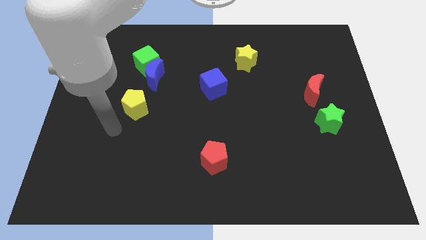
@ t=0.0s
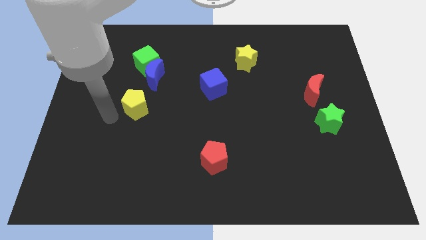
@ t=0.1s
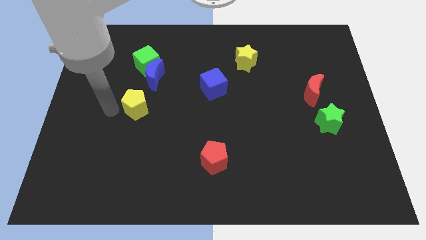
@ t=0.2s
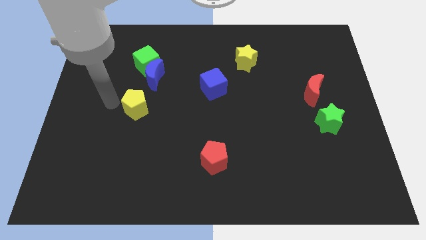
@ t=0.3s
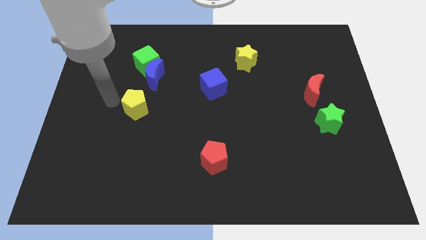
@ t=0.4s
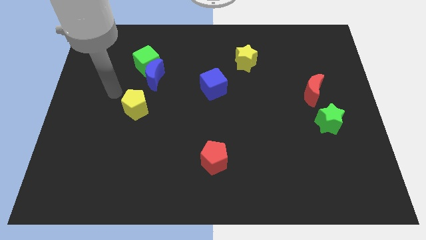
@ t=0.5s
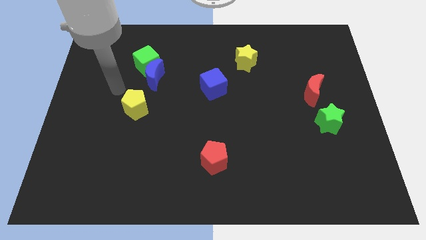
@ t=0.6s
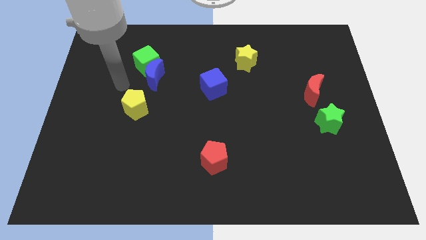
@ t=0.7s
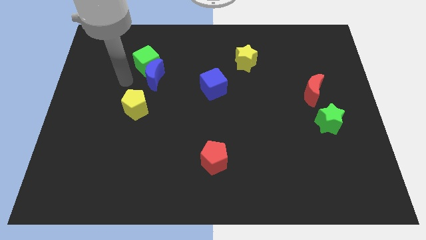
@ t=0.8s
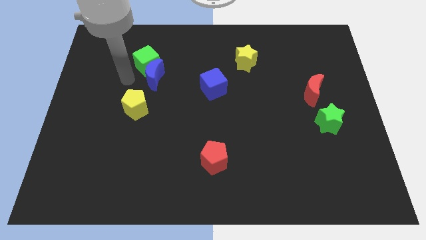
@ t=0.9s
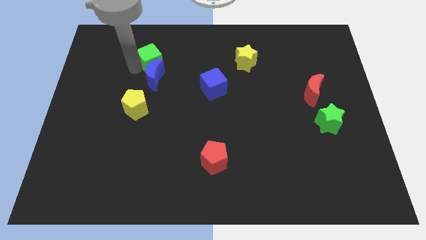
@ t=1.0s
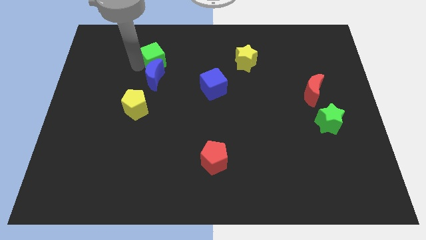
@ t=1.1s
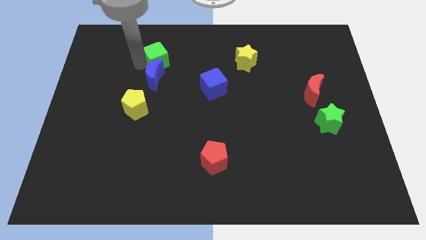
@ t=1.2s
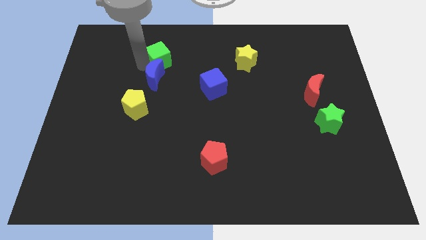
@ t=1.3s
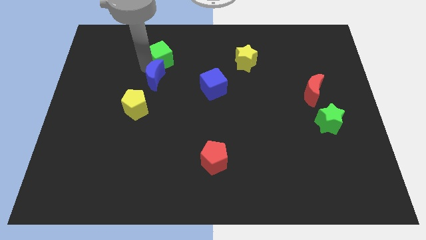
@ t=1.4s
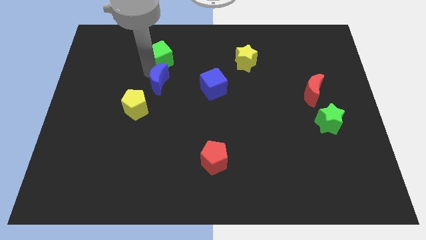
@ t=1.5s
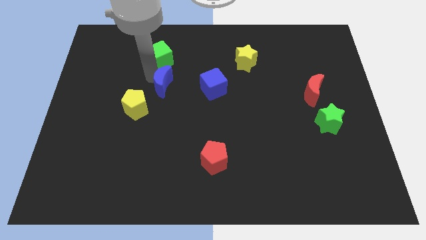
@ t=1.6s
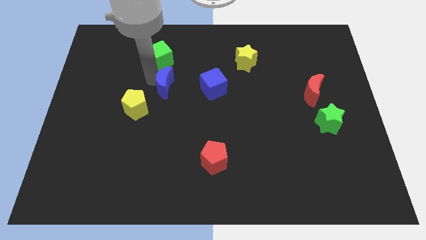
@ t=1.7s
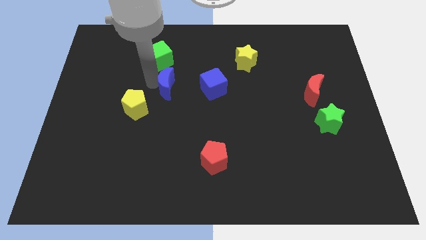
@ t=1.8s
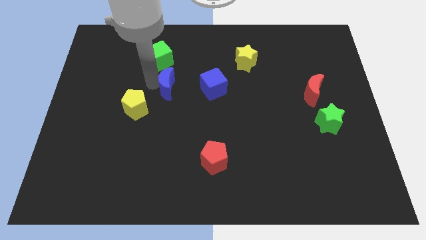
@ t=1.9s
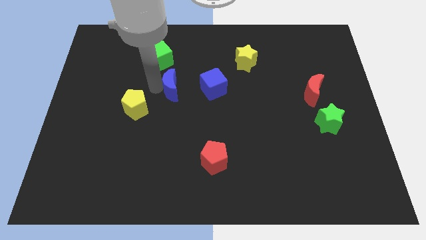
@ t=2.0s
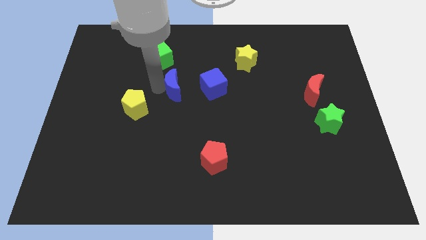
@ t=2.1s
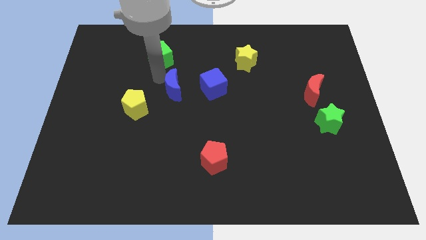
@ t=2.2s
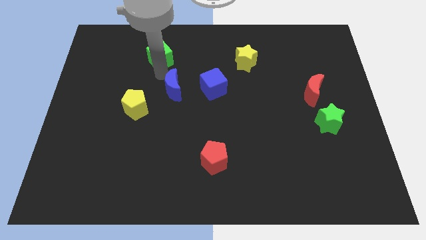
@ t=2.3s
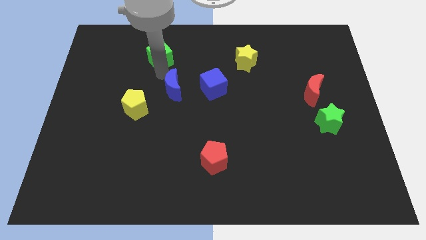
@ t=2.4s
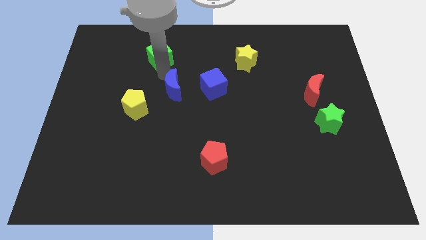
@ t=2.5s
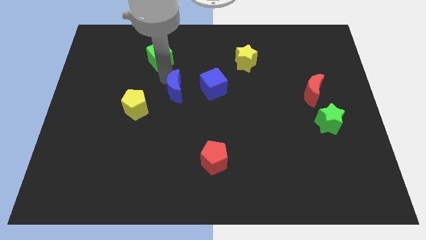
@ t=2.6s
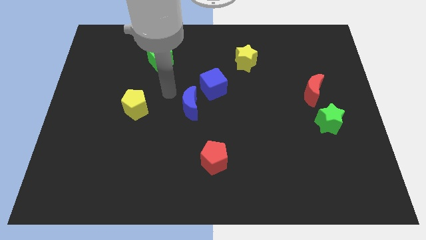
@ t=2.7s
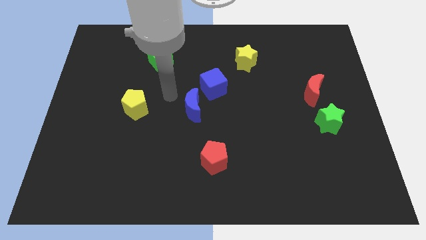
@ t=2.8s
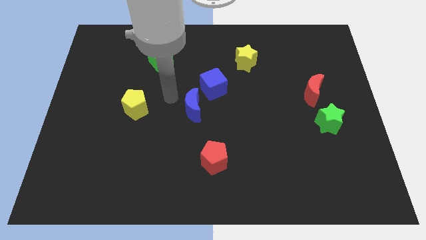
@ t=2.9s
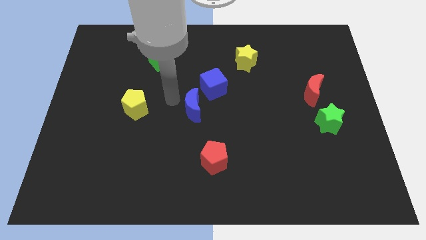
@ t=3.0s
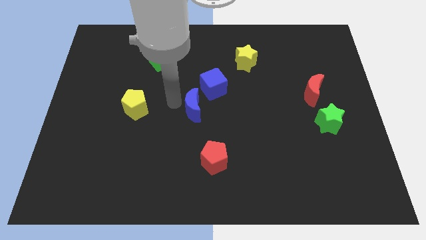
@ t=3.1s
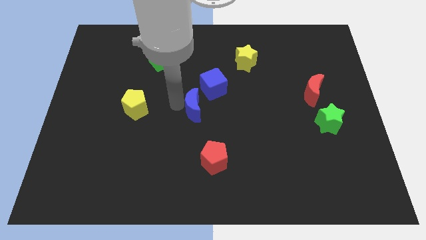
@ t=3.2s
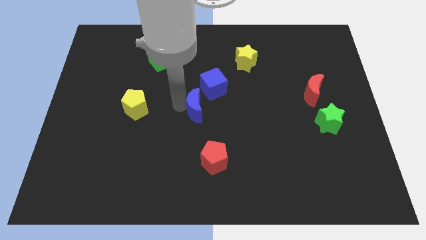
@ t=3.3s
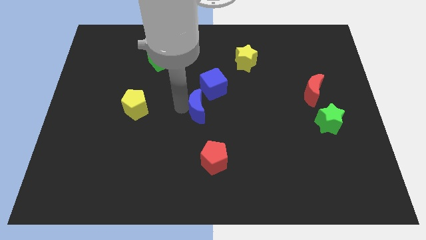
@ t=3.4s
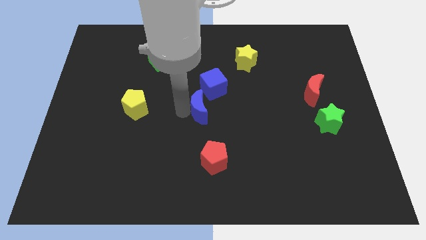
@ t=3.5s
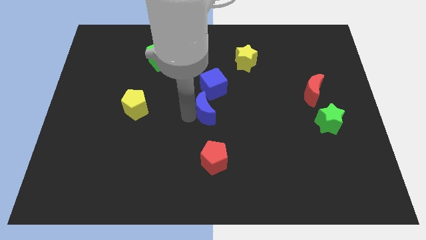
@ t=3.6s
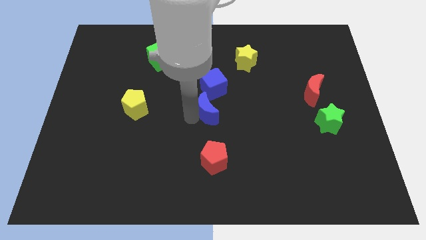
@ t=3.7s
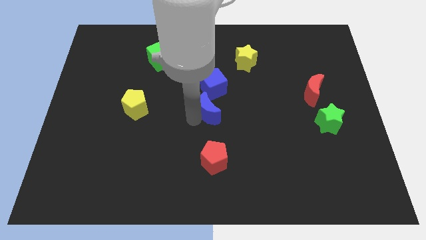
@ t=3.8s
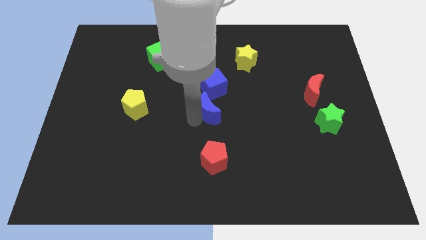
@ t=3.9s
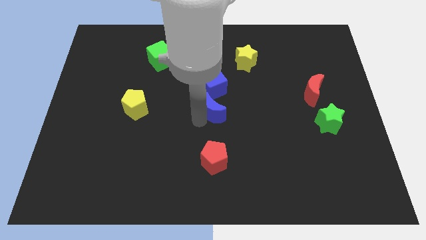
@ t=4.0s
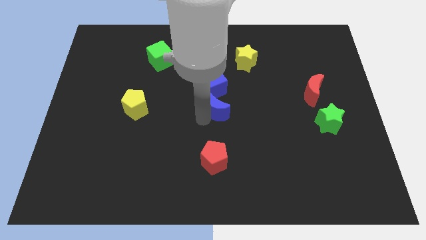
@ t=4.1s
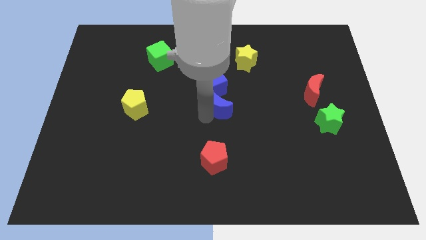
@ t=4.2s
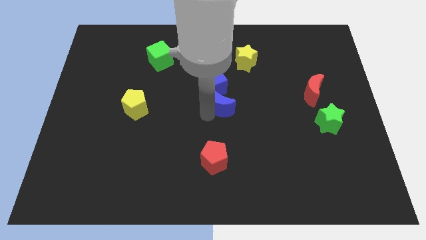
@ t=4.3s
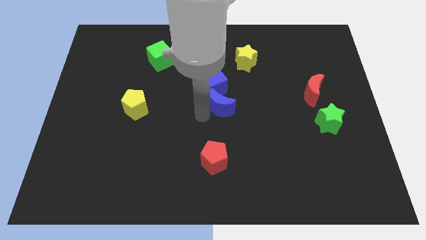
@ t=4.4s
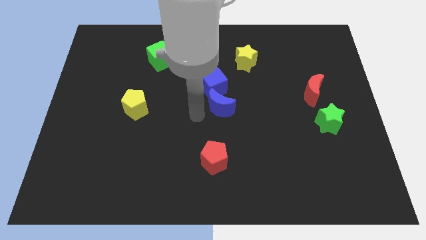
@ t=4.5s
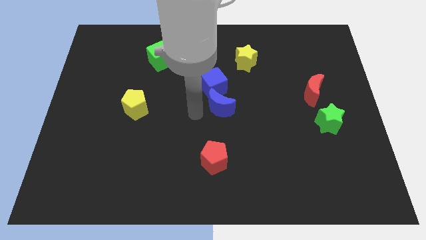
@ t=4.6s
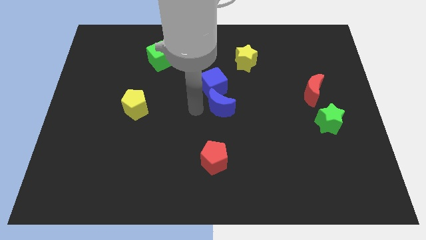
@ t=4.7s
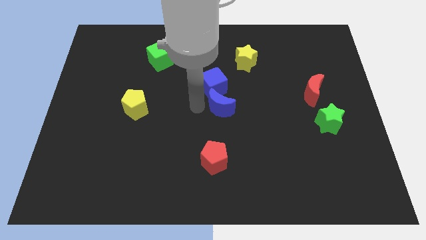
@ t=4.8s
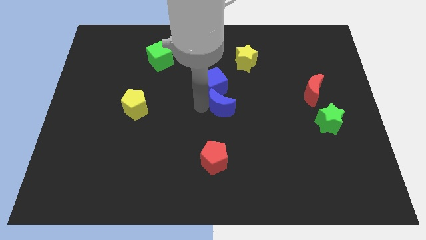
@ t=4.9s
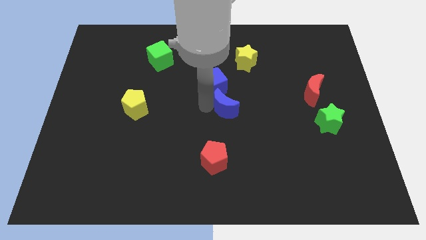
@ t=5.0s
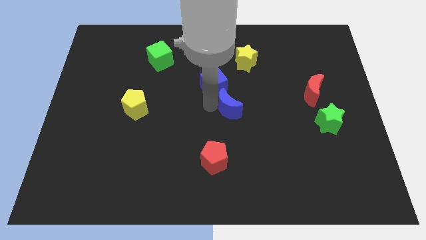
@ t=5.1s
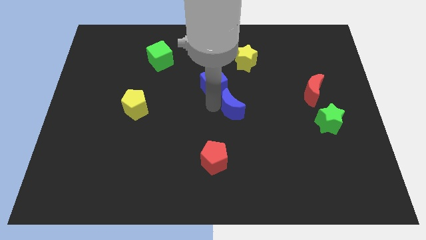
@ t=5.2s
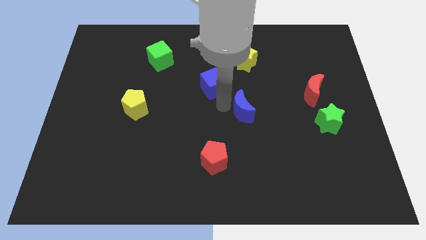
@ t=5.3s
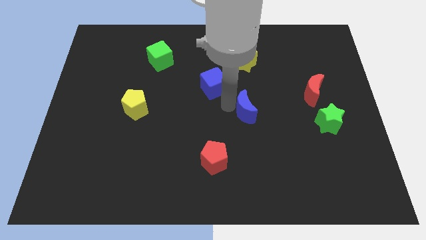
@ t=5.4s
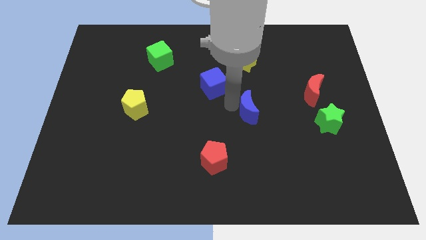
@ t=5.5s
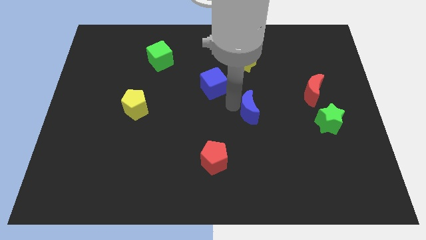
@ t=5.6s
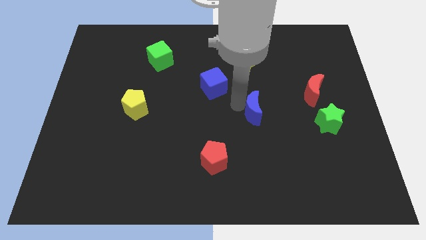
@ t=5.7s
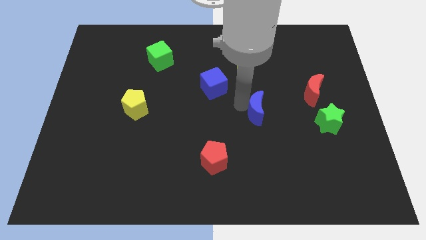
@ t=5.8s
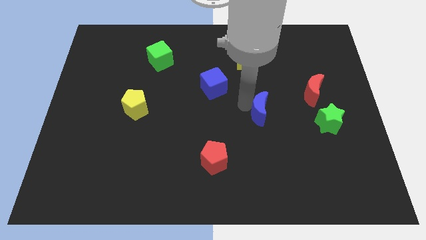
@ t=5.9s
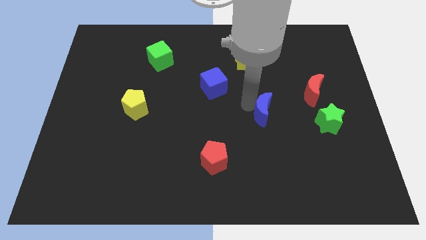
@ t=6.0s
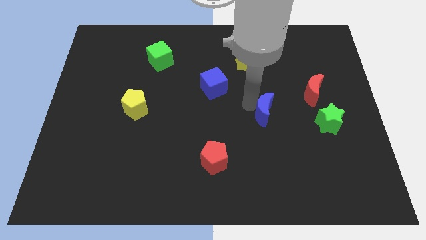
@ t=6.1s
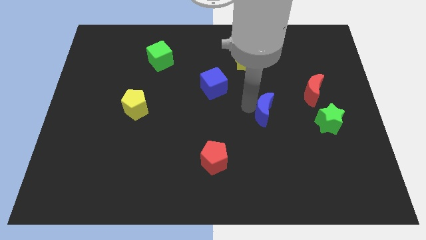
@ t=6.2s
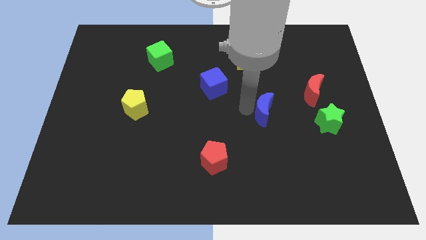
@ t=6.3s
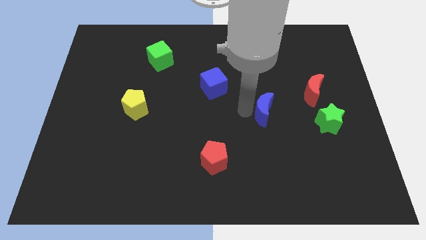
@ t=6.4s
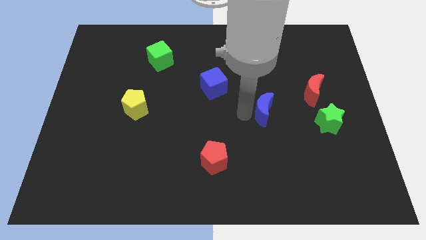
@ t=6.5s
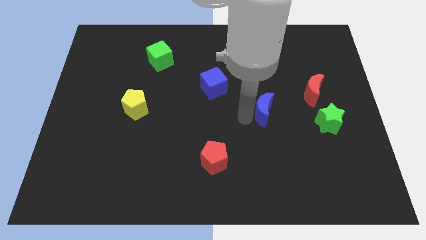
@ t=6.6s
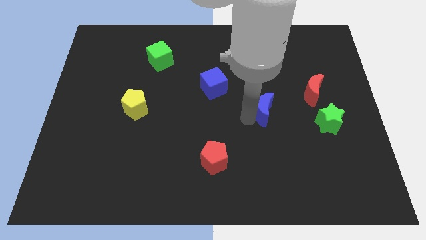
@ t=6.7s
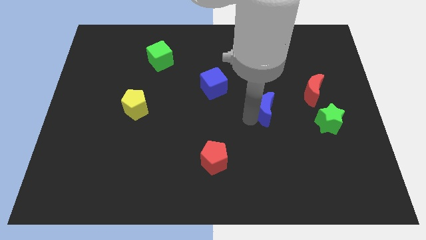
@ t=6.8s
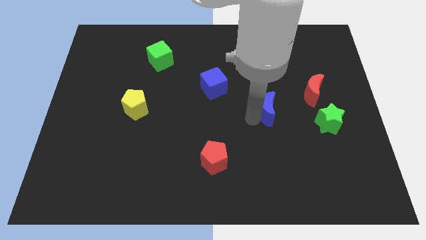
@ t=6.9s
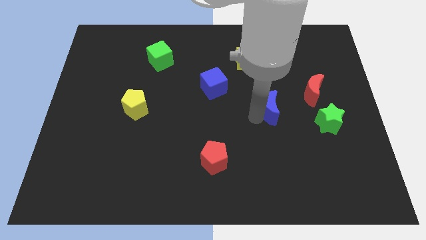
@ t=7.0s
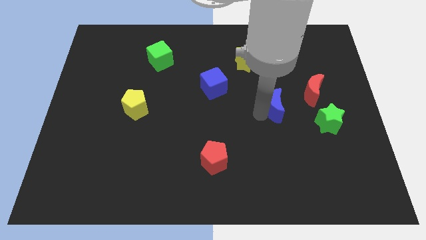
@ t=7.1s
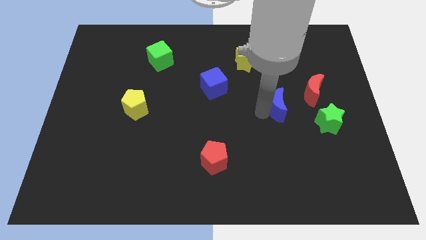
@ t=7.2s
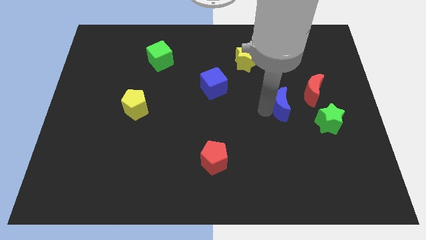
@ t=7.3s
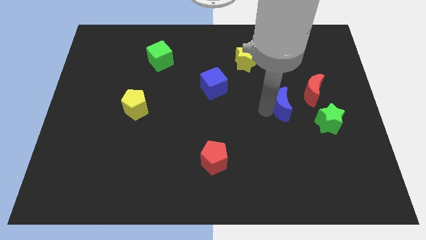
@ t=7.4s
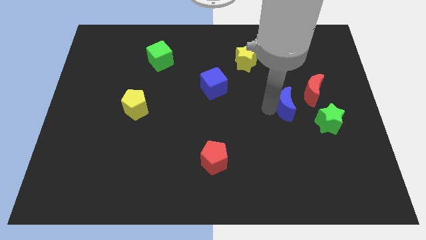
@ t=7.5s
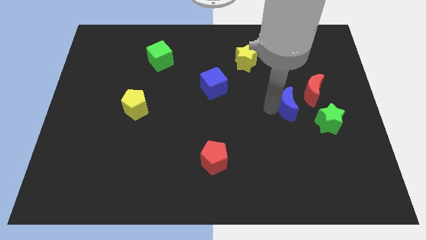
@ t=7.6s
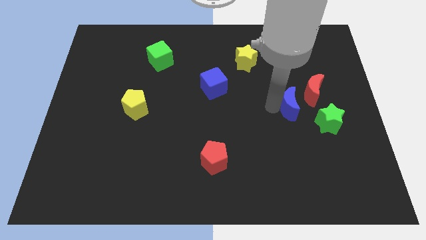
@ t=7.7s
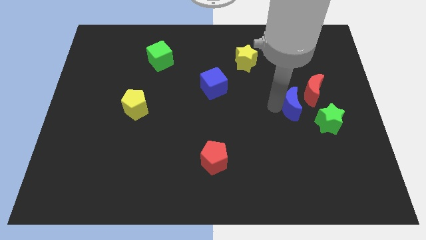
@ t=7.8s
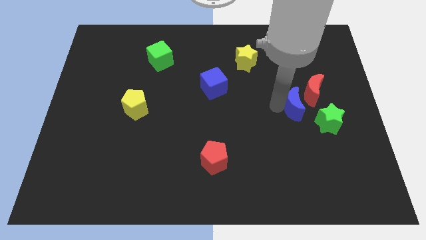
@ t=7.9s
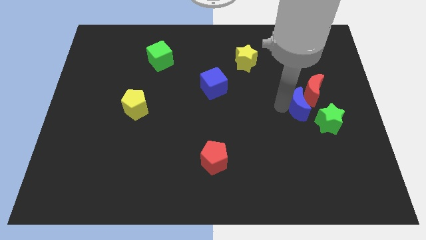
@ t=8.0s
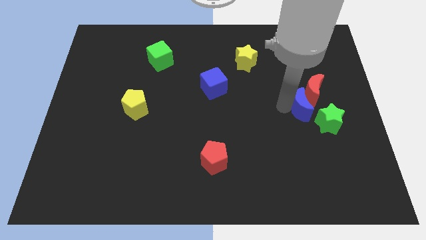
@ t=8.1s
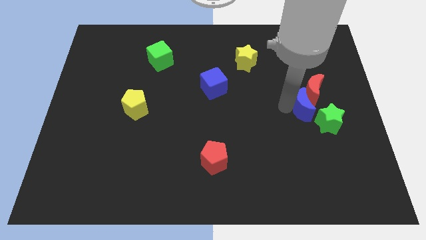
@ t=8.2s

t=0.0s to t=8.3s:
put the blue moon next to the red moon

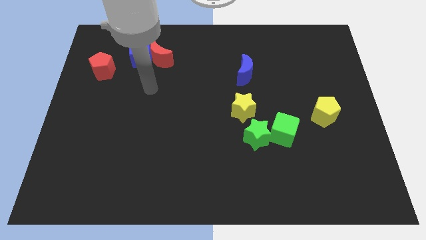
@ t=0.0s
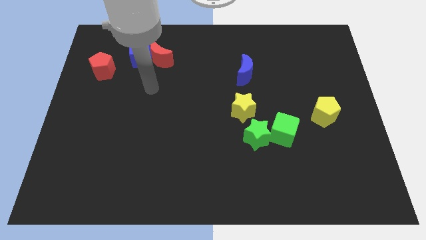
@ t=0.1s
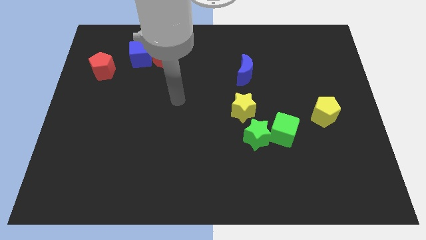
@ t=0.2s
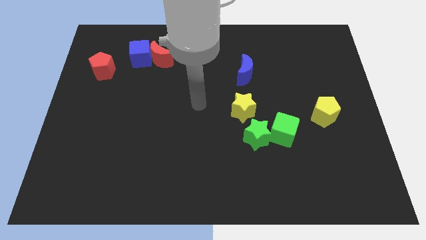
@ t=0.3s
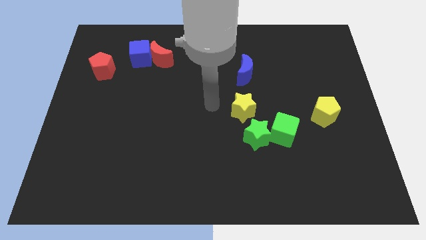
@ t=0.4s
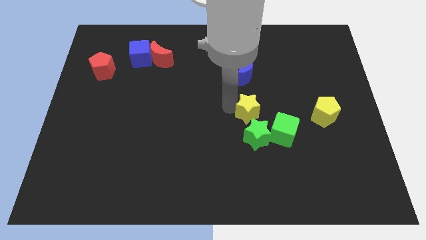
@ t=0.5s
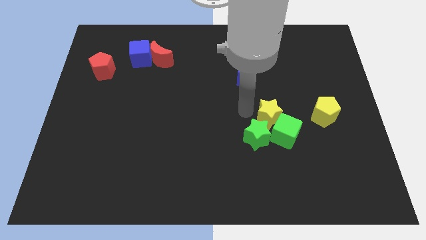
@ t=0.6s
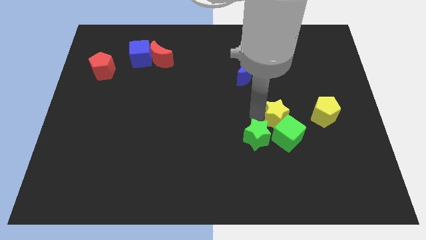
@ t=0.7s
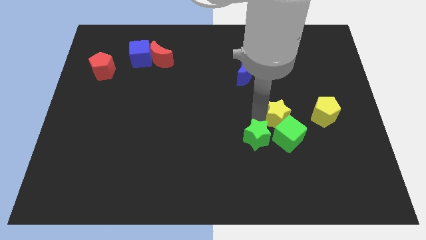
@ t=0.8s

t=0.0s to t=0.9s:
slide the yellow star towards the green cube
